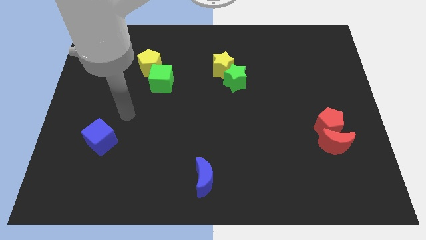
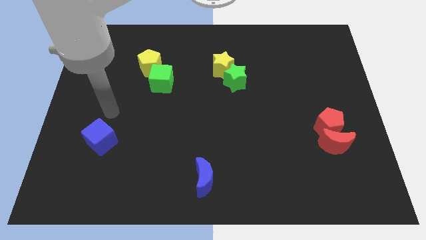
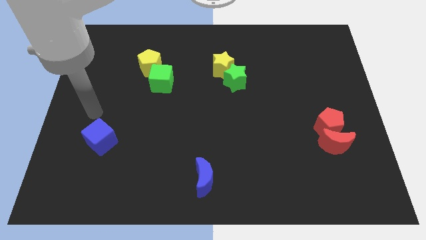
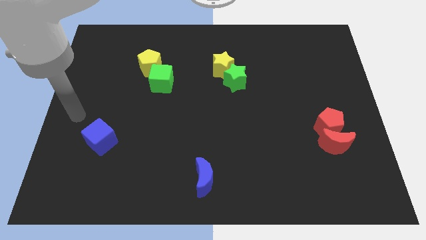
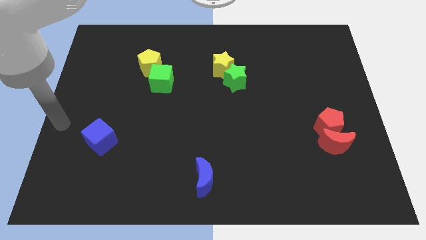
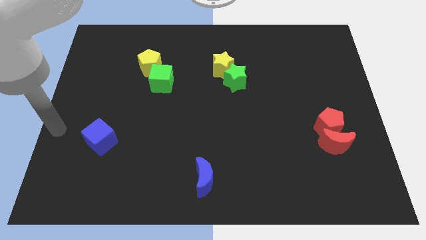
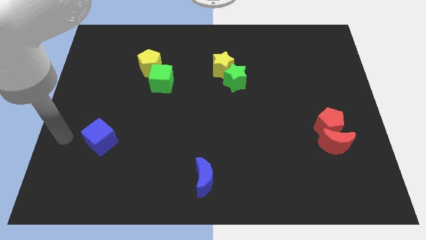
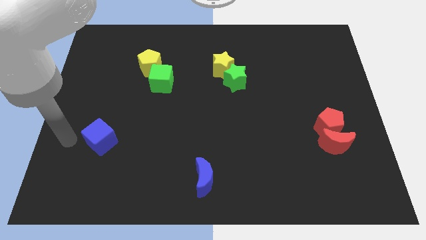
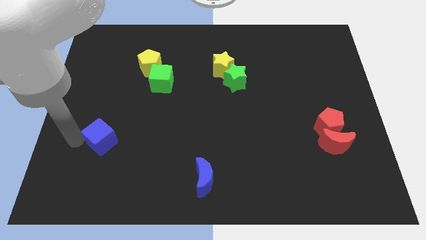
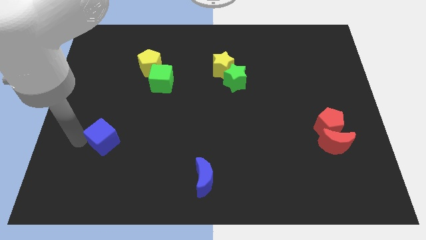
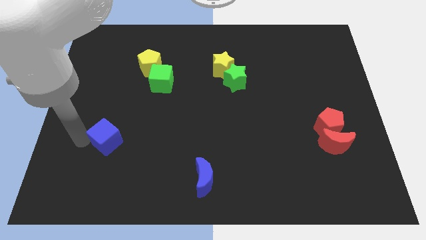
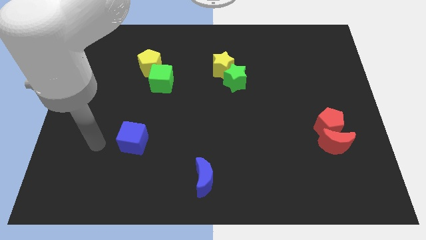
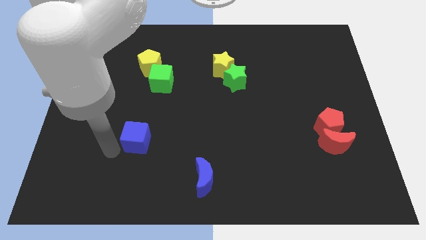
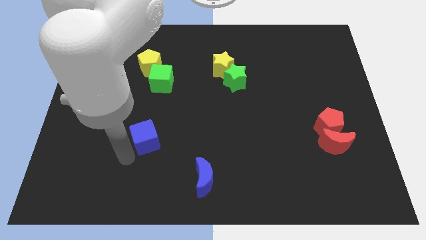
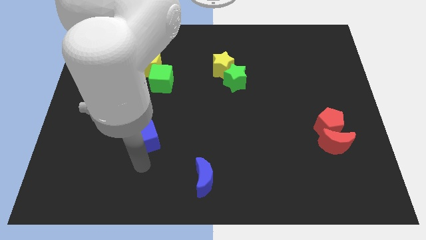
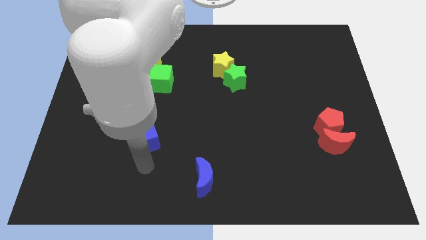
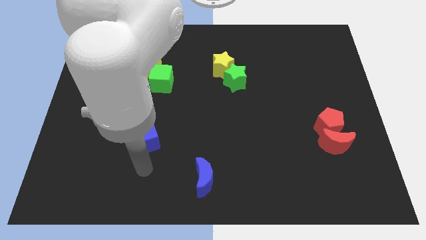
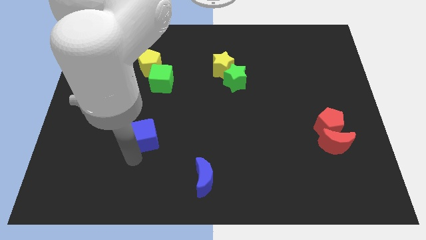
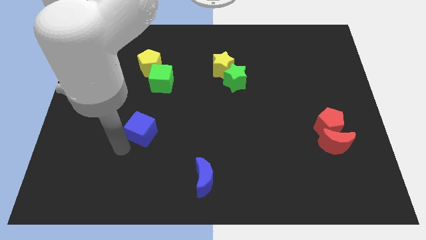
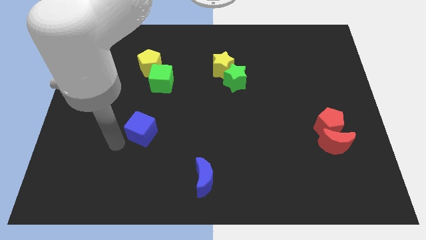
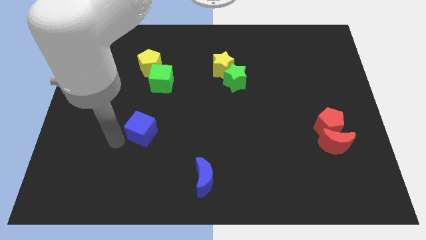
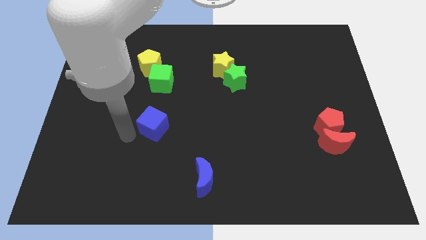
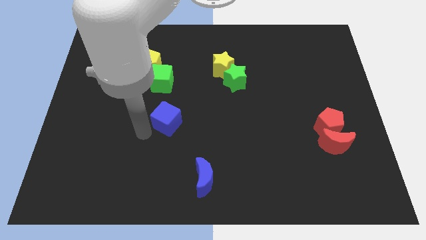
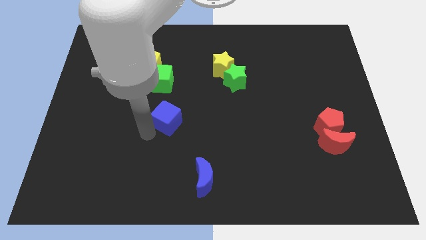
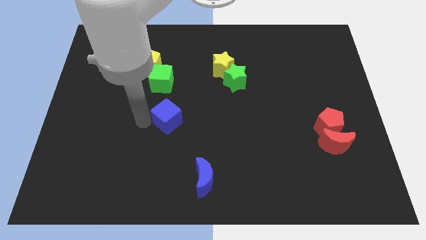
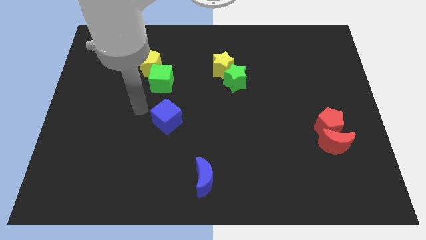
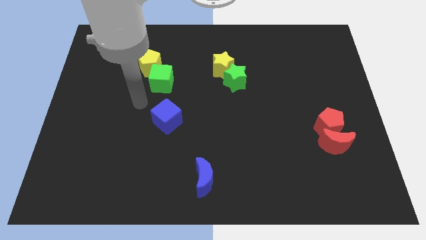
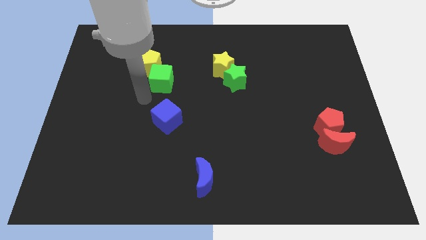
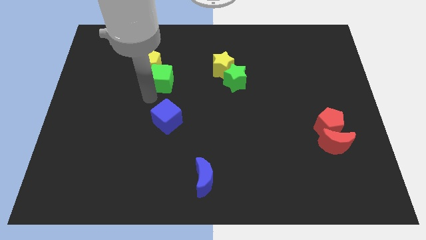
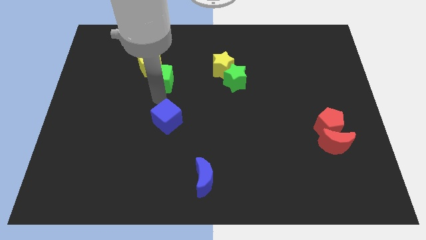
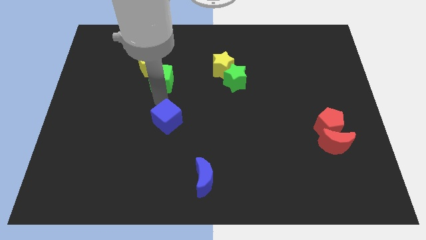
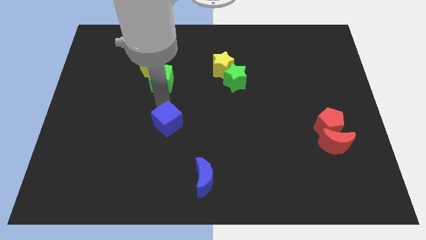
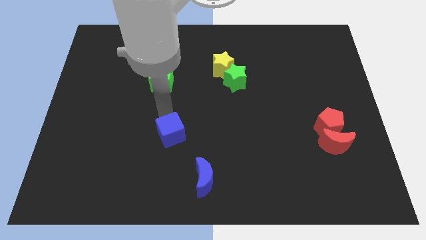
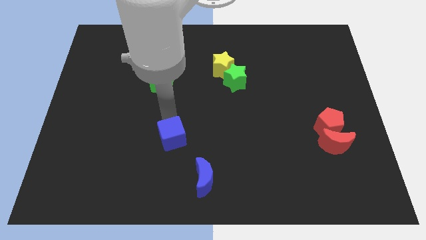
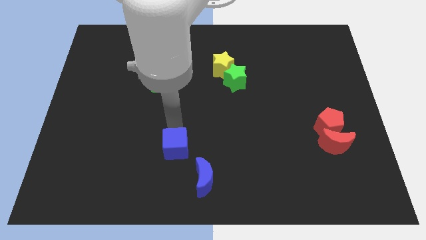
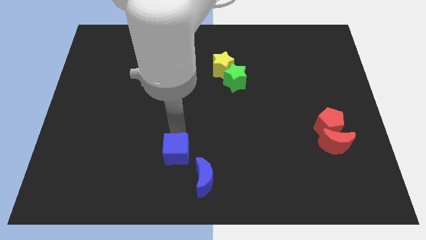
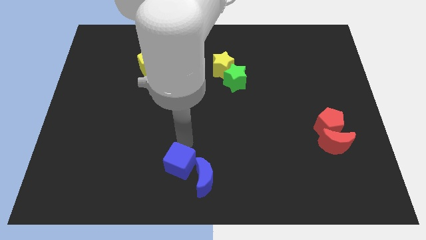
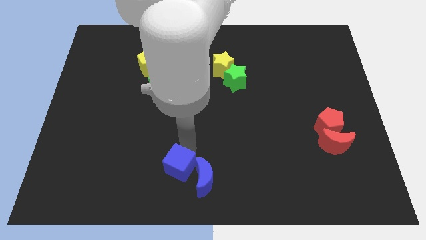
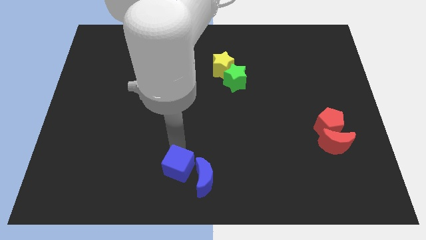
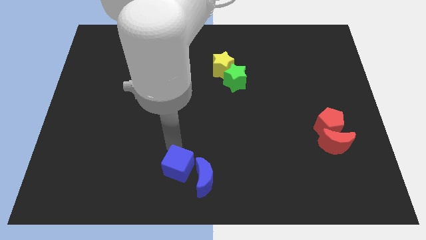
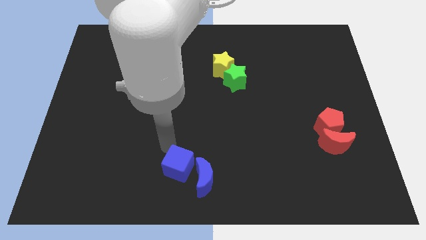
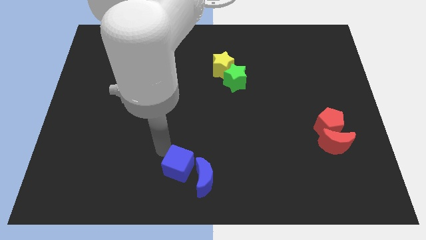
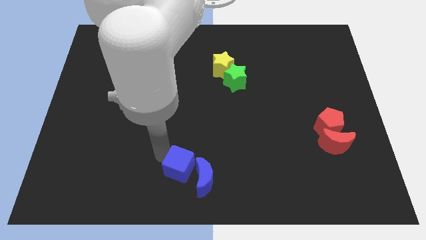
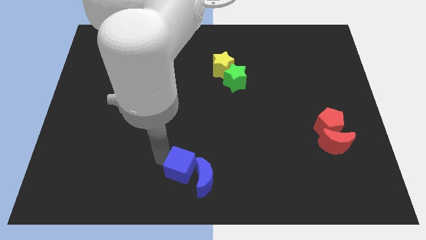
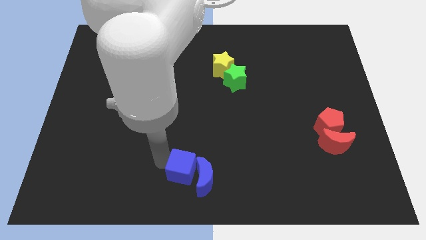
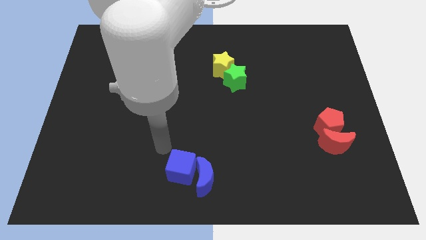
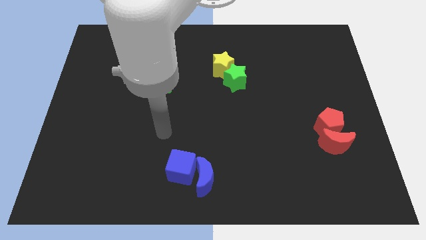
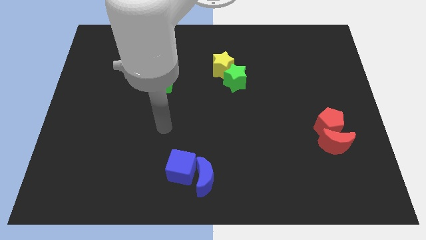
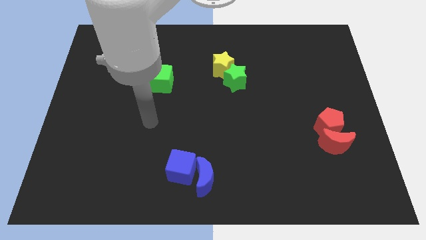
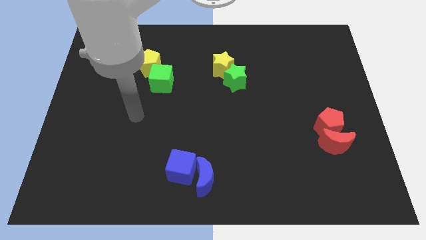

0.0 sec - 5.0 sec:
push the blue cube into the blue crescent

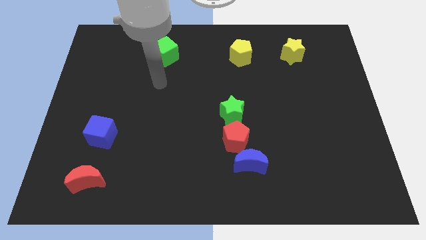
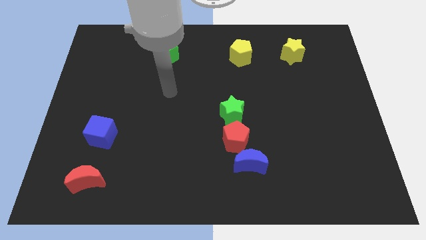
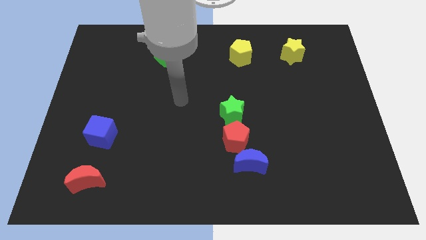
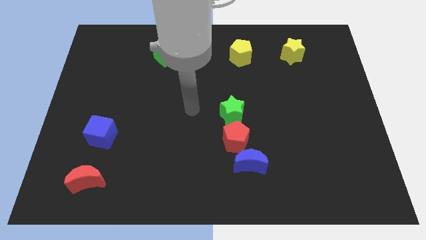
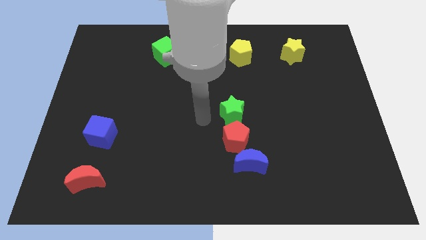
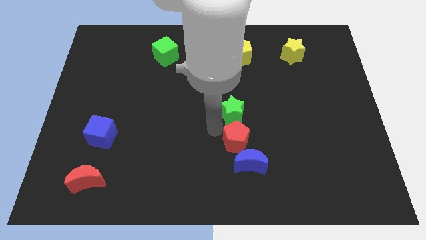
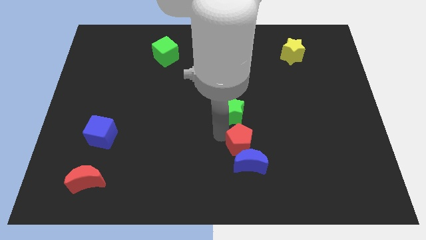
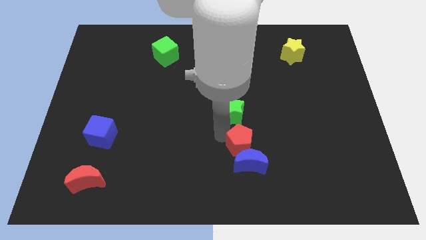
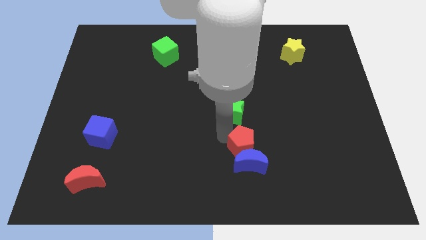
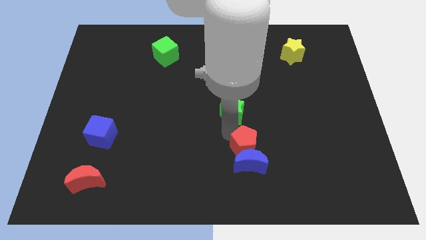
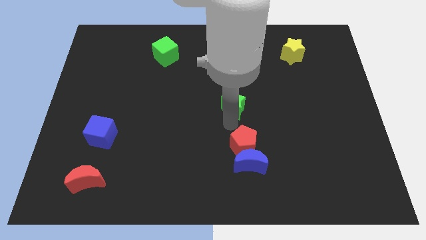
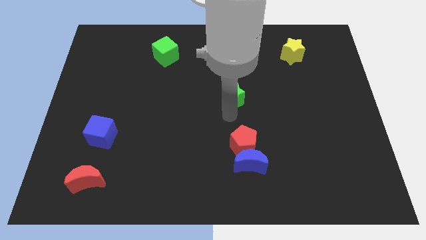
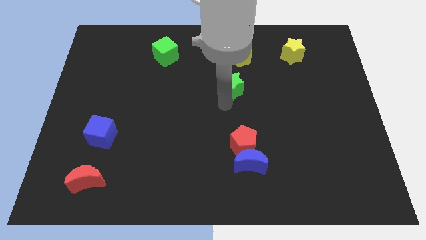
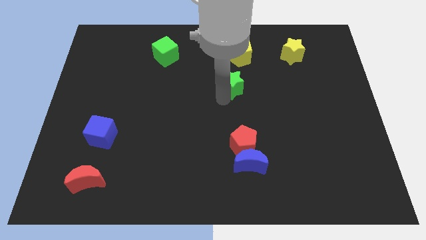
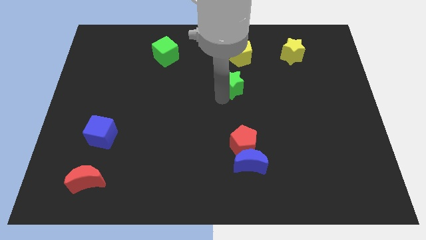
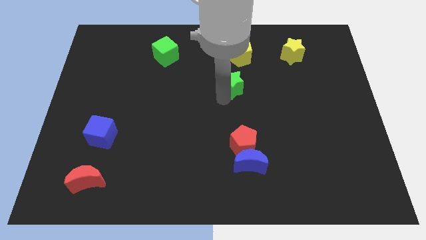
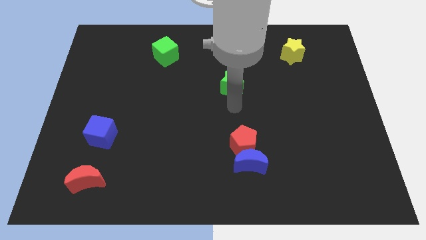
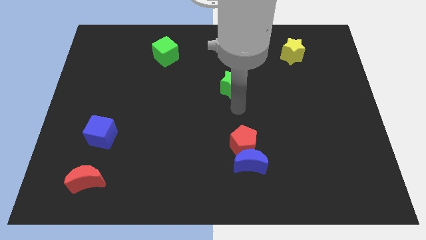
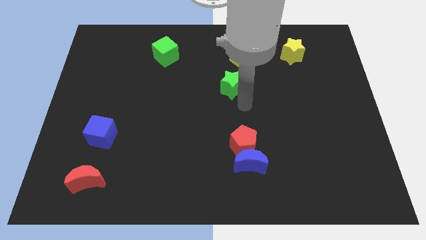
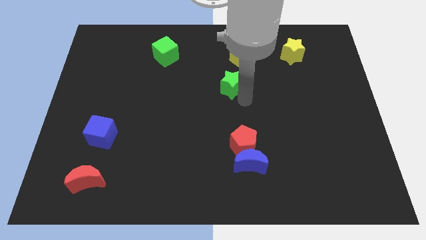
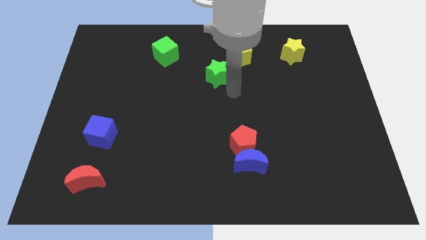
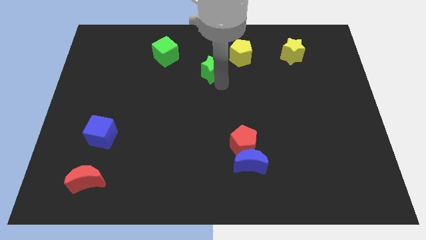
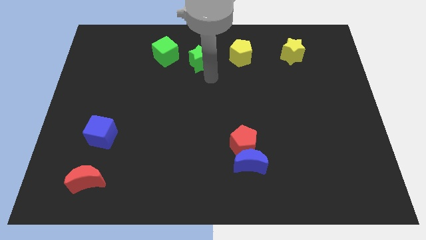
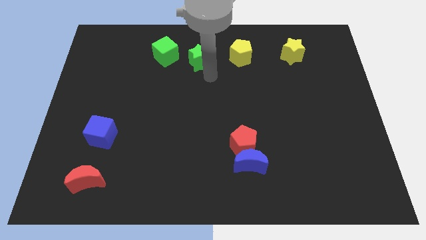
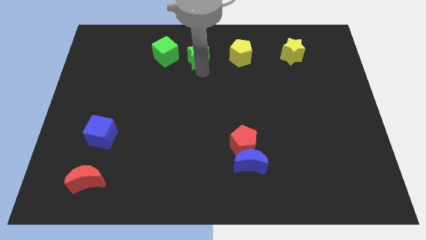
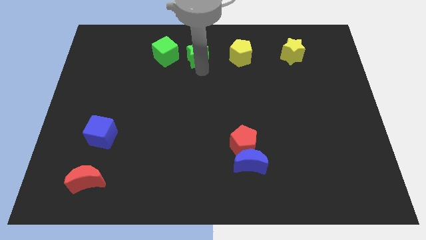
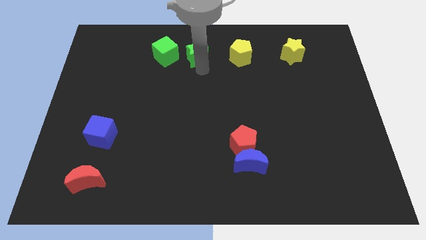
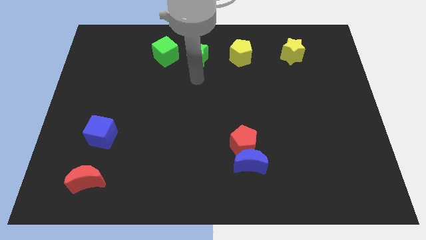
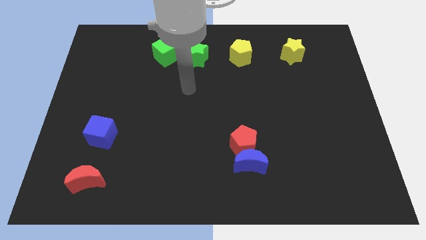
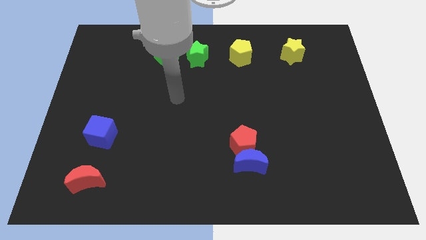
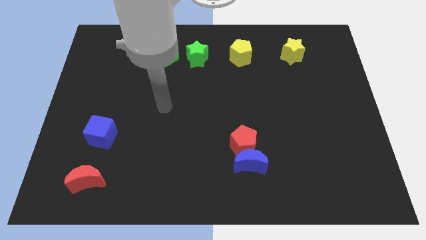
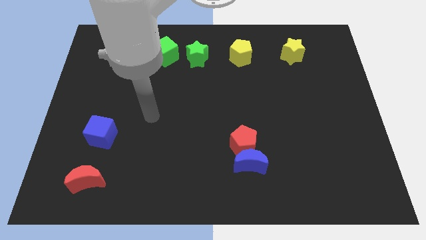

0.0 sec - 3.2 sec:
move the green star to left of the yellow pentagon

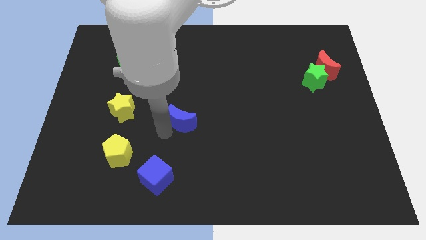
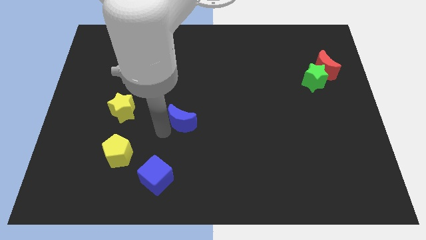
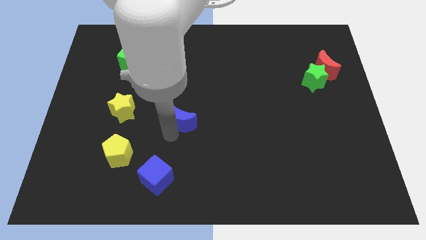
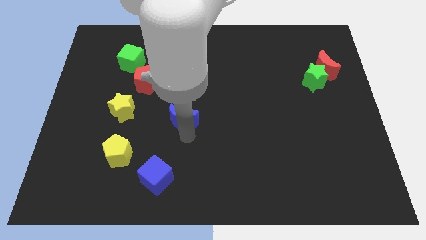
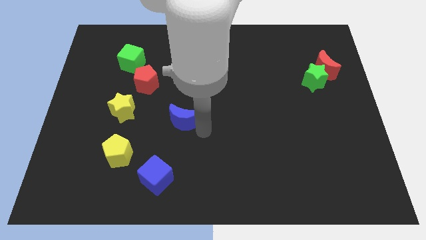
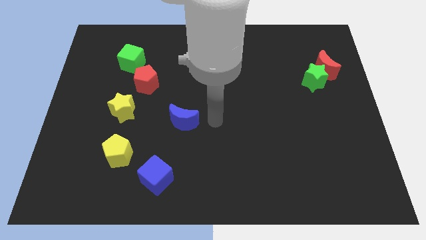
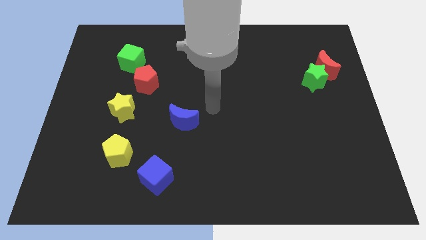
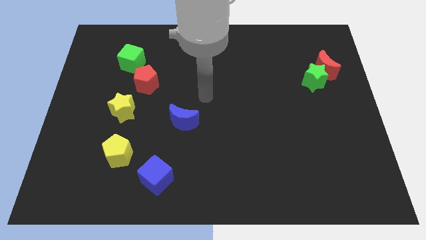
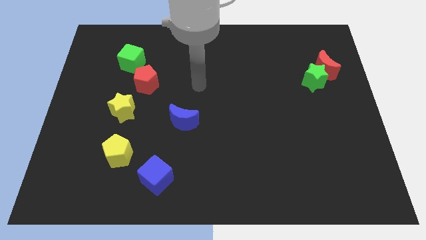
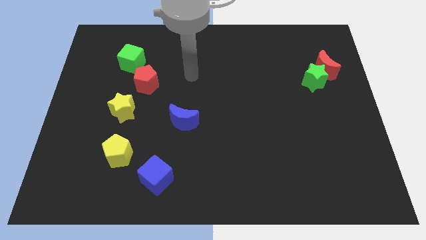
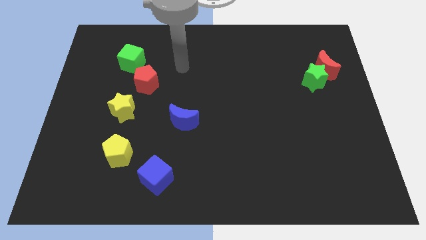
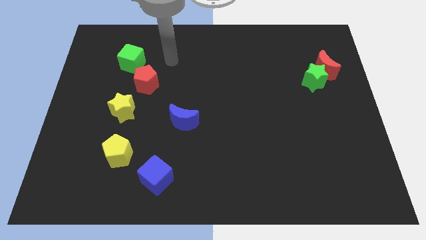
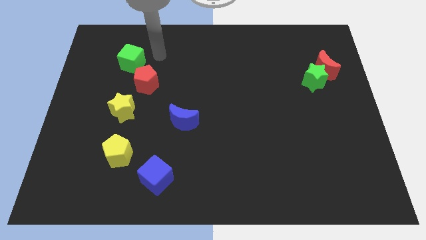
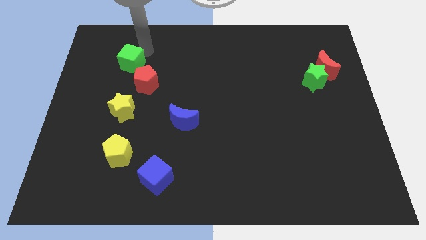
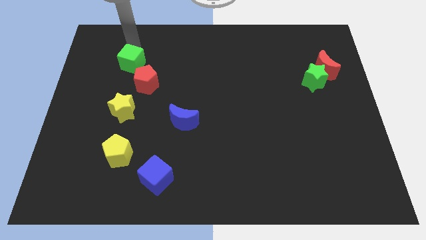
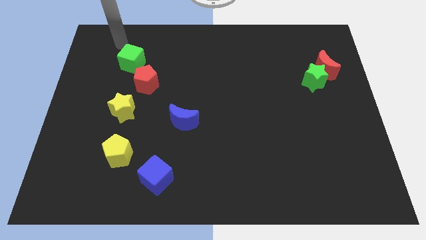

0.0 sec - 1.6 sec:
move arm above the green cube
